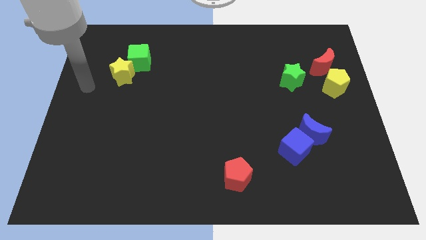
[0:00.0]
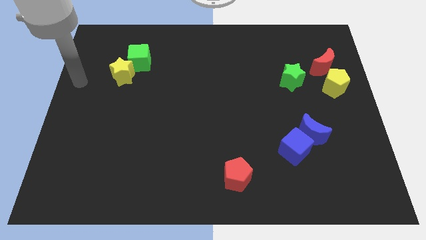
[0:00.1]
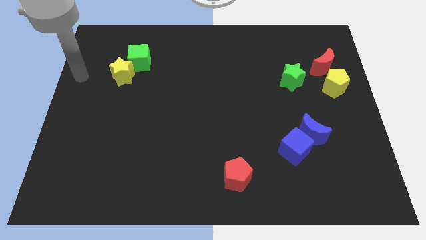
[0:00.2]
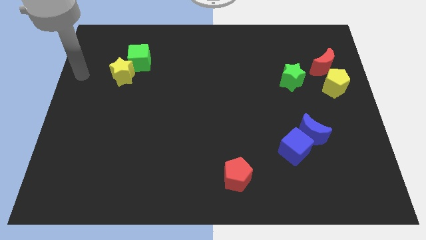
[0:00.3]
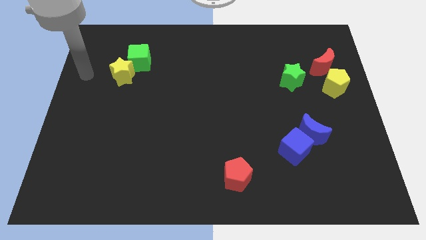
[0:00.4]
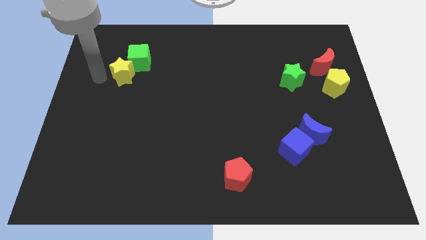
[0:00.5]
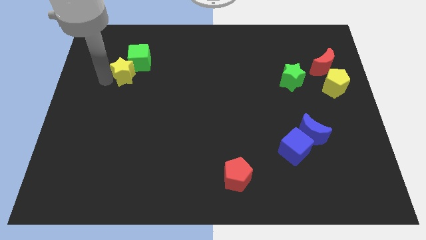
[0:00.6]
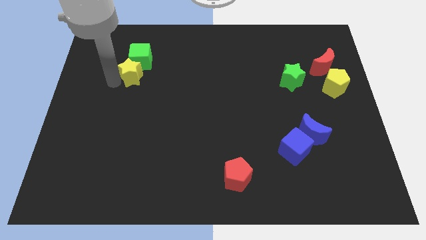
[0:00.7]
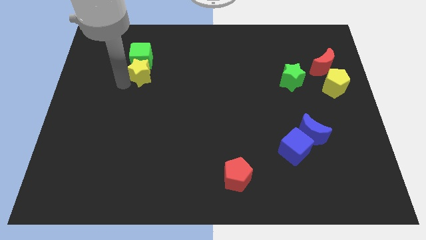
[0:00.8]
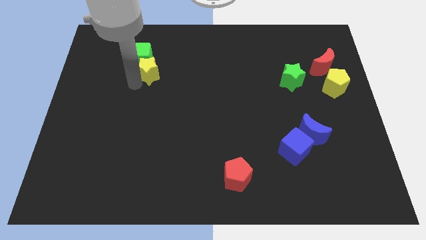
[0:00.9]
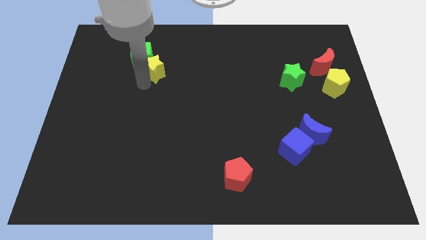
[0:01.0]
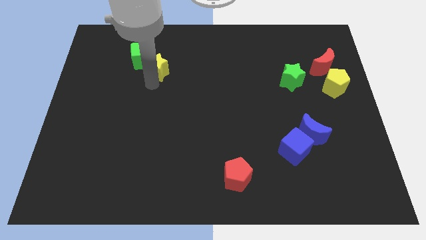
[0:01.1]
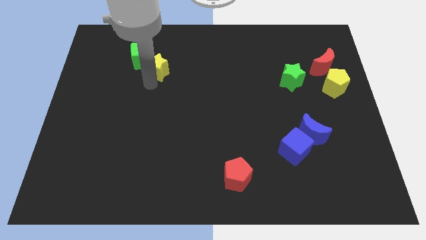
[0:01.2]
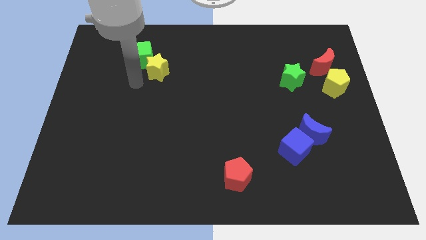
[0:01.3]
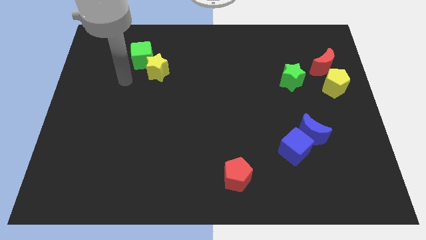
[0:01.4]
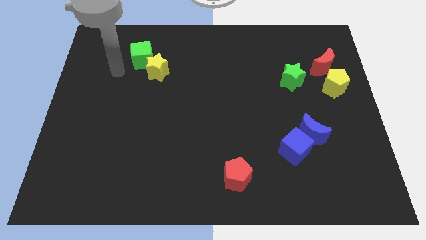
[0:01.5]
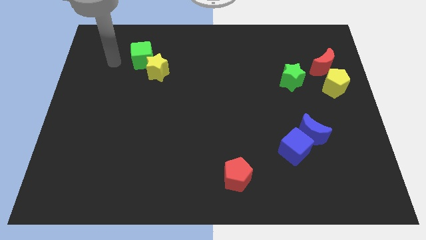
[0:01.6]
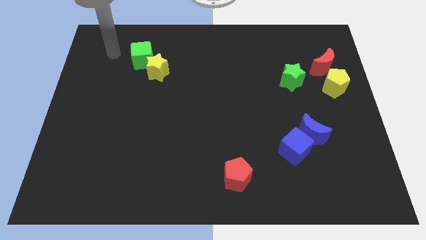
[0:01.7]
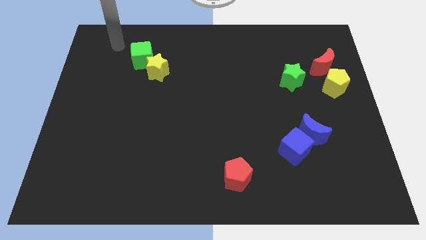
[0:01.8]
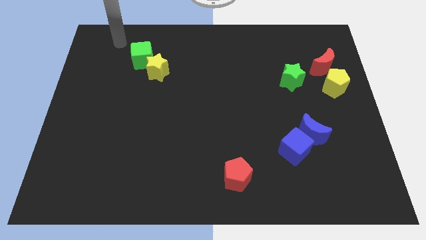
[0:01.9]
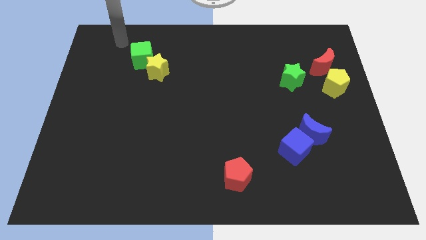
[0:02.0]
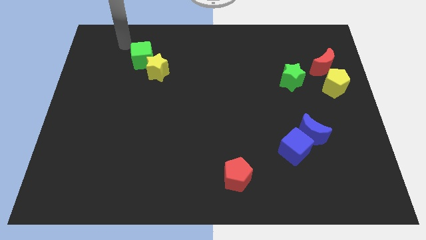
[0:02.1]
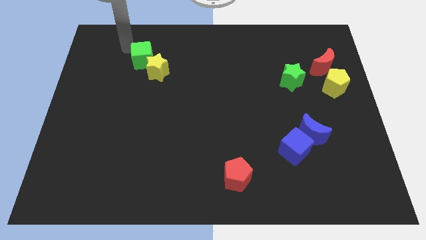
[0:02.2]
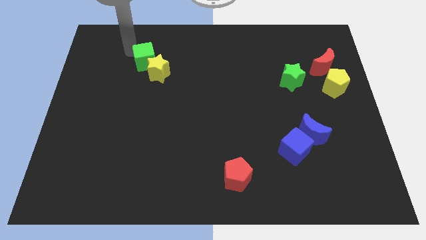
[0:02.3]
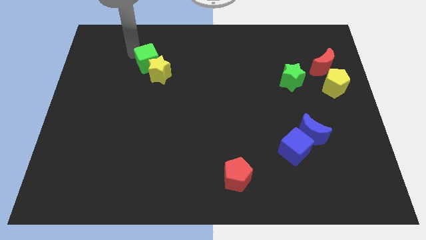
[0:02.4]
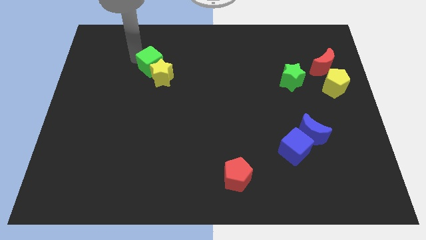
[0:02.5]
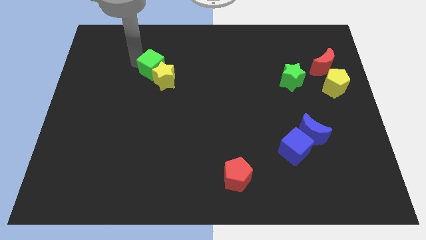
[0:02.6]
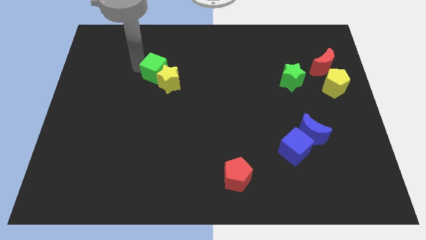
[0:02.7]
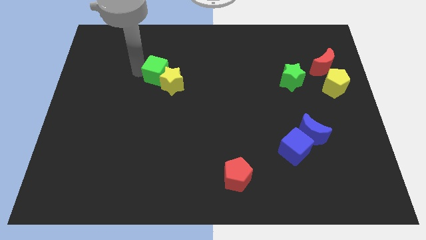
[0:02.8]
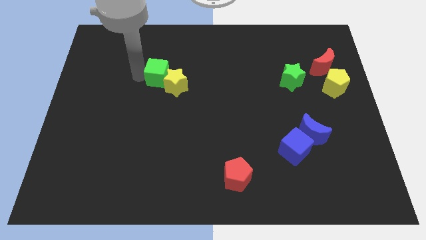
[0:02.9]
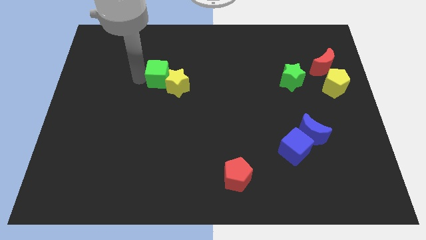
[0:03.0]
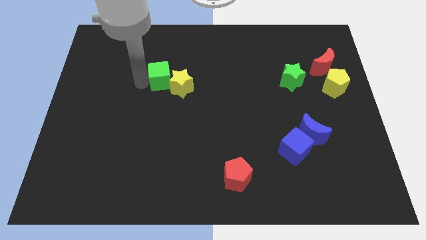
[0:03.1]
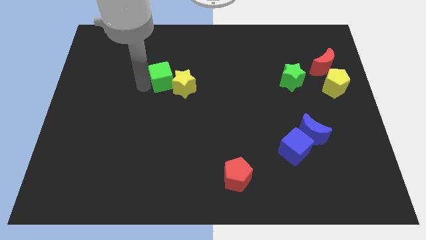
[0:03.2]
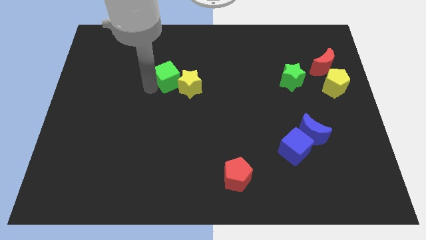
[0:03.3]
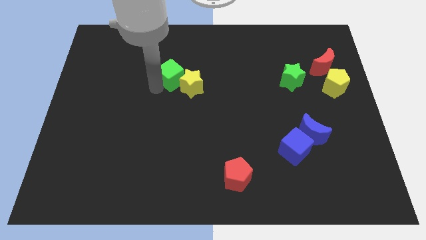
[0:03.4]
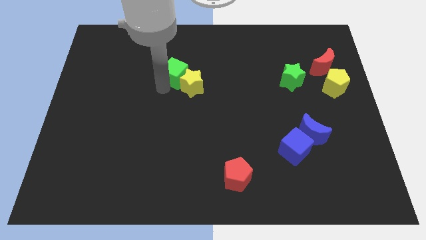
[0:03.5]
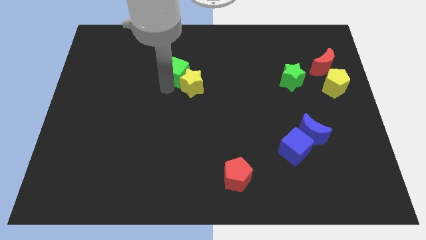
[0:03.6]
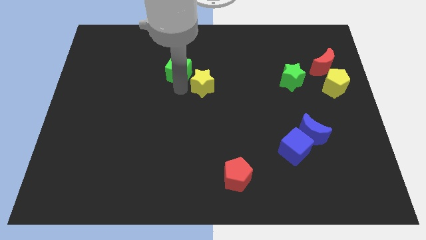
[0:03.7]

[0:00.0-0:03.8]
push the green cube into the yellow star

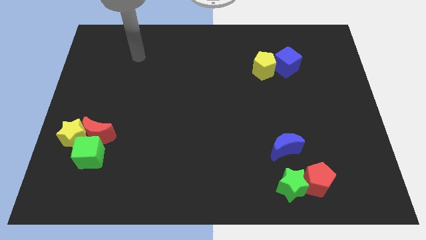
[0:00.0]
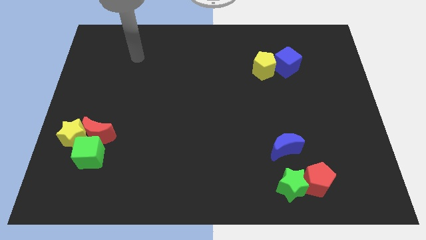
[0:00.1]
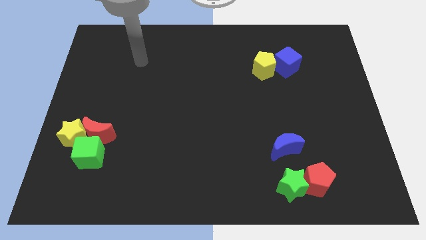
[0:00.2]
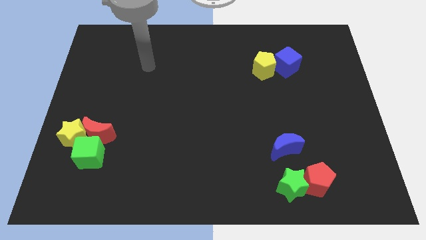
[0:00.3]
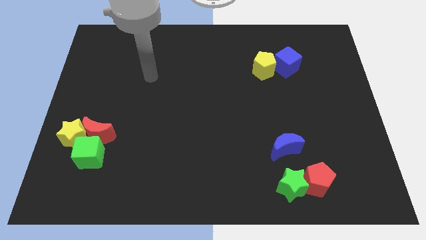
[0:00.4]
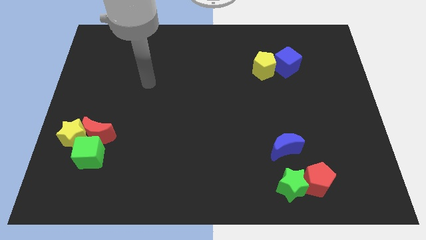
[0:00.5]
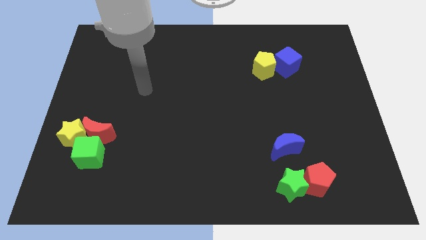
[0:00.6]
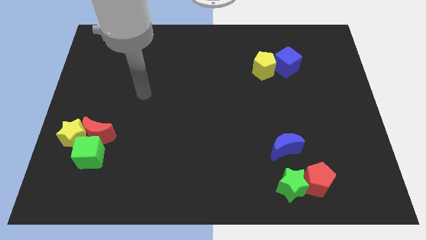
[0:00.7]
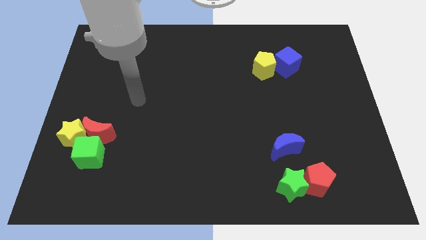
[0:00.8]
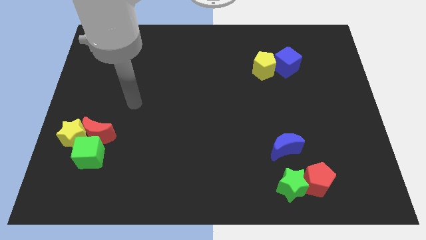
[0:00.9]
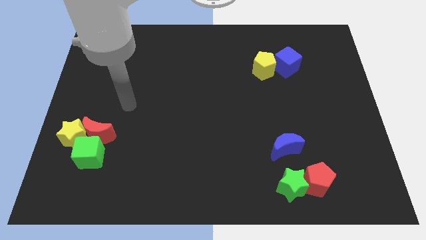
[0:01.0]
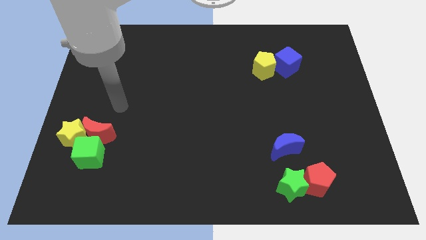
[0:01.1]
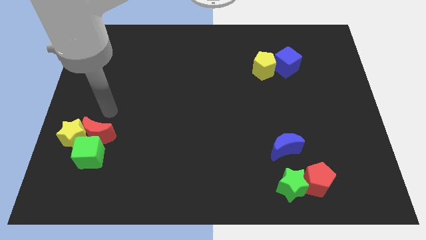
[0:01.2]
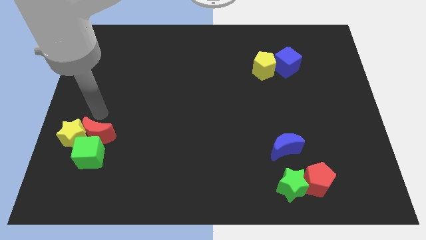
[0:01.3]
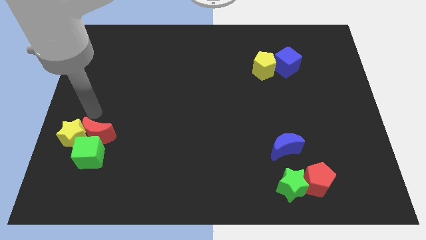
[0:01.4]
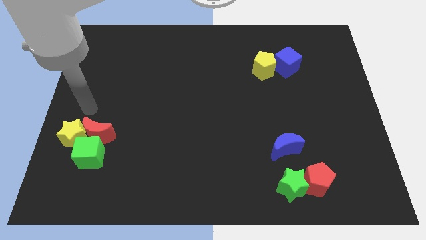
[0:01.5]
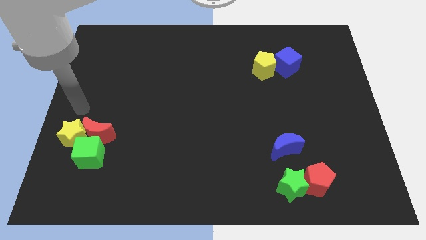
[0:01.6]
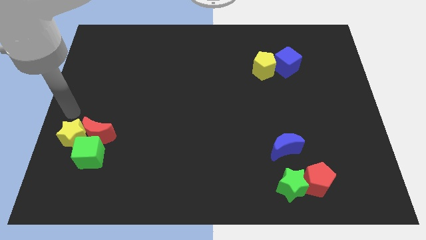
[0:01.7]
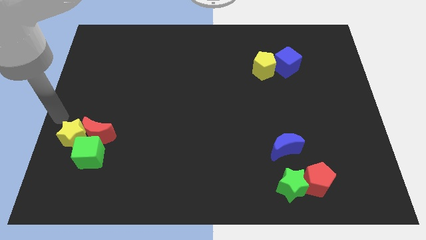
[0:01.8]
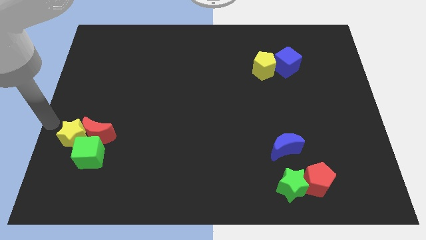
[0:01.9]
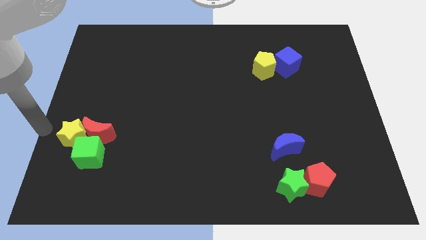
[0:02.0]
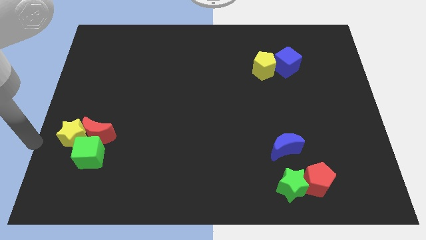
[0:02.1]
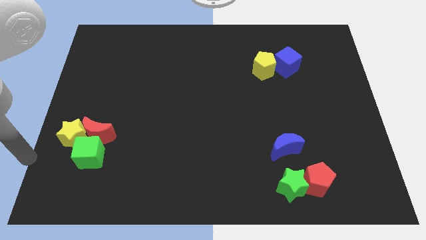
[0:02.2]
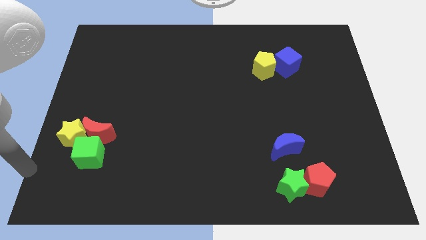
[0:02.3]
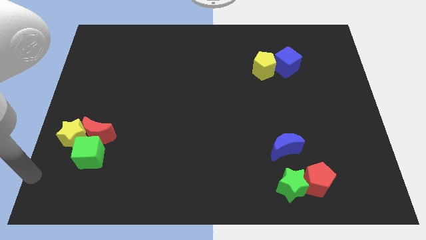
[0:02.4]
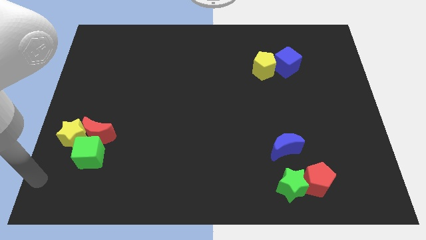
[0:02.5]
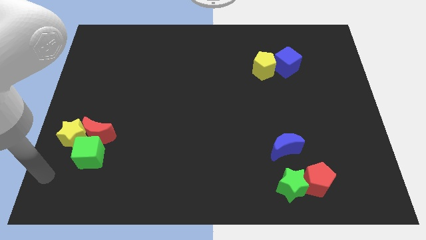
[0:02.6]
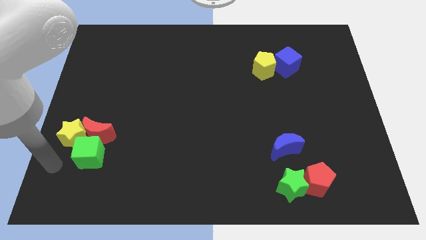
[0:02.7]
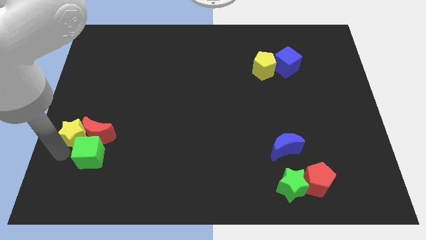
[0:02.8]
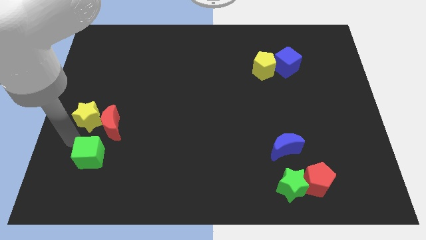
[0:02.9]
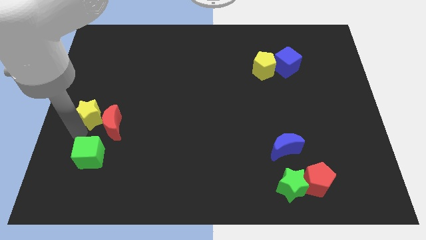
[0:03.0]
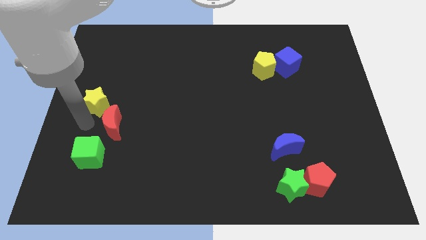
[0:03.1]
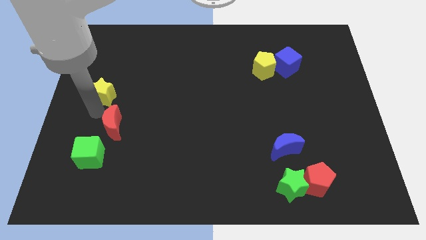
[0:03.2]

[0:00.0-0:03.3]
separate the yellow star from green cube and red moon

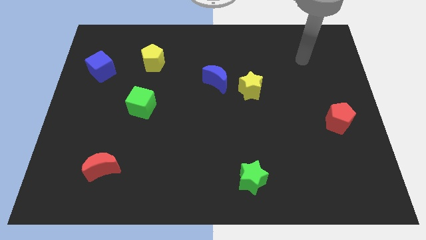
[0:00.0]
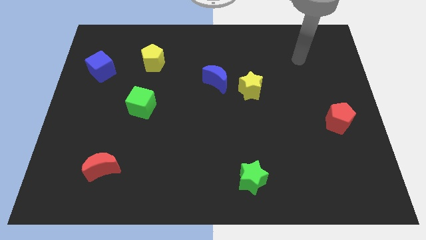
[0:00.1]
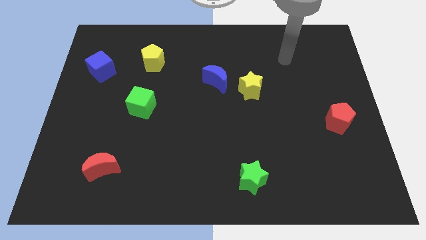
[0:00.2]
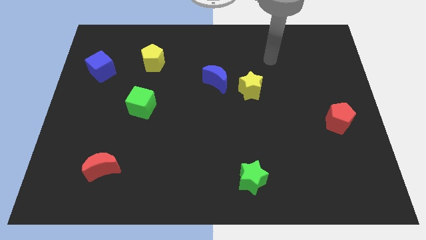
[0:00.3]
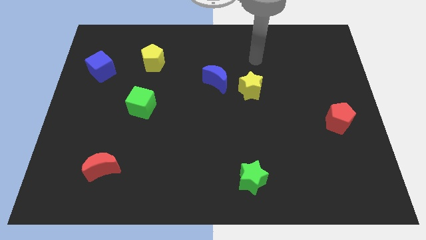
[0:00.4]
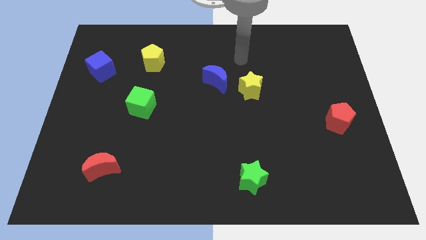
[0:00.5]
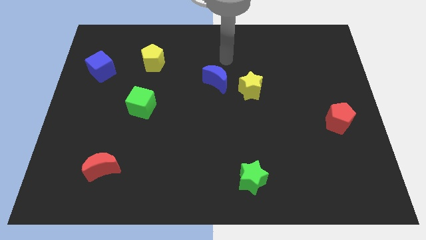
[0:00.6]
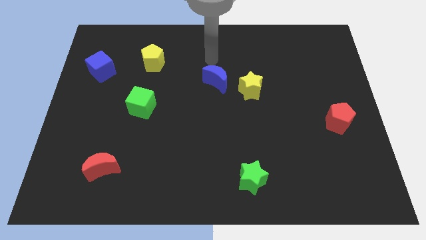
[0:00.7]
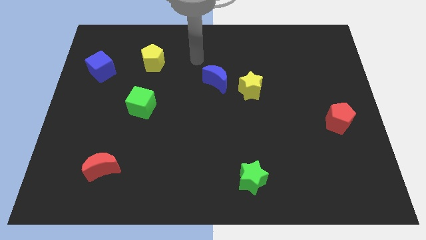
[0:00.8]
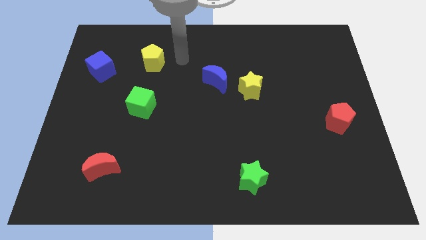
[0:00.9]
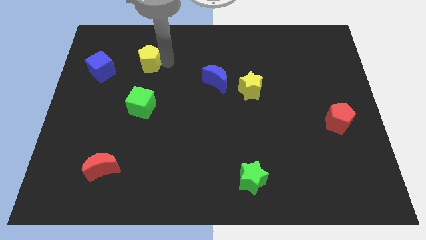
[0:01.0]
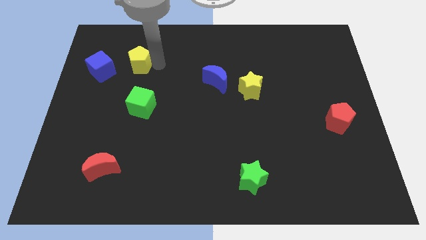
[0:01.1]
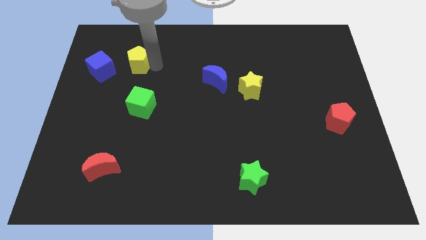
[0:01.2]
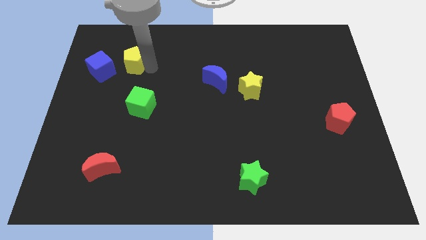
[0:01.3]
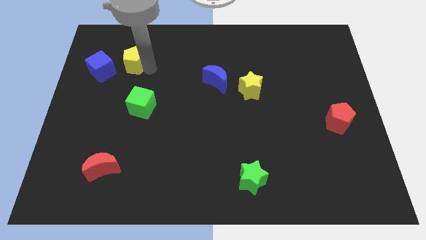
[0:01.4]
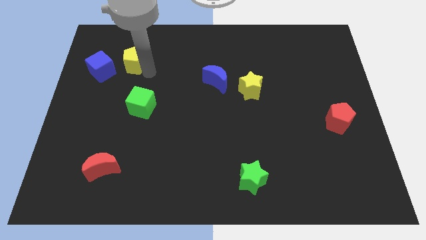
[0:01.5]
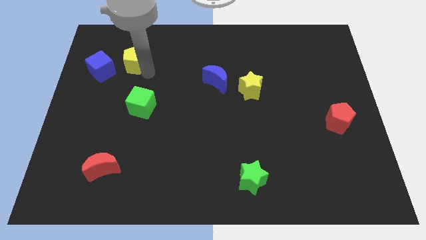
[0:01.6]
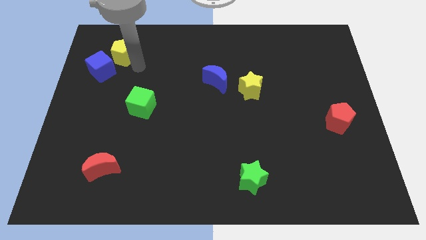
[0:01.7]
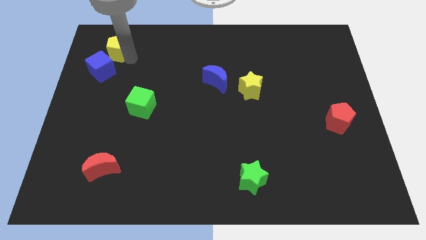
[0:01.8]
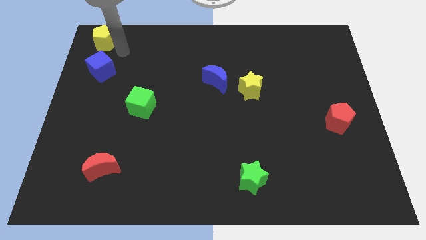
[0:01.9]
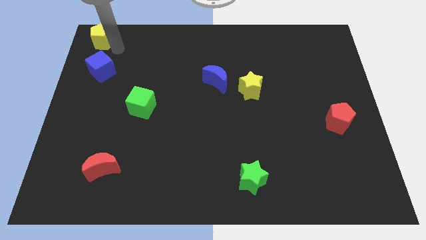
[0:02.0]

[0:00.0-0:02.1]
place the yellow pentagon vertically above the blue cube
